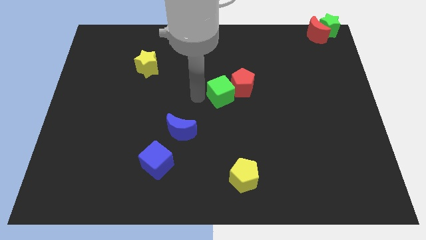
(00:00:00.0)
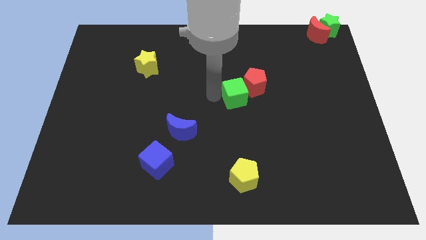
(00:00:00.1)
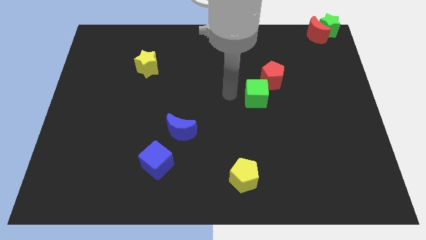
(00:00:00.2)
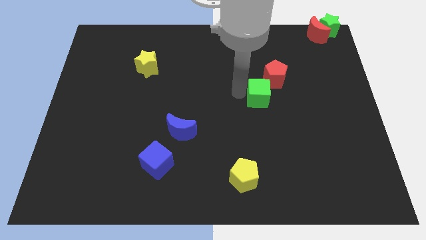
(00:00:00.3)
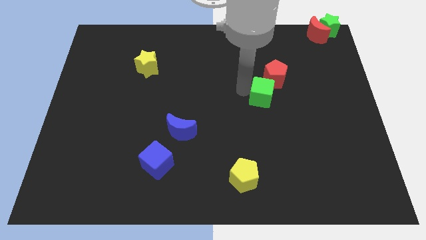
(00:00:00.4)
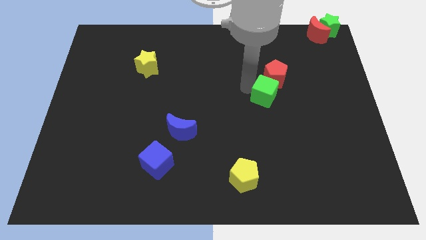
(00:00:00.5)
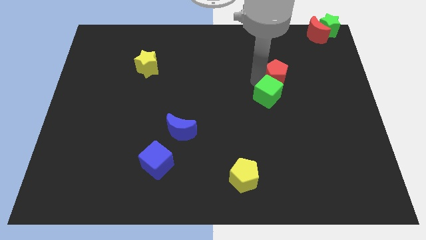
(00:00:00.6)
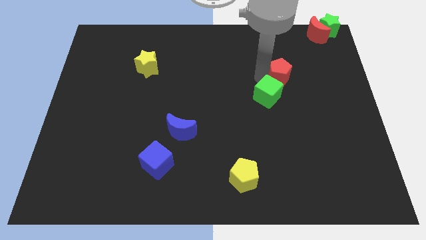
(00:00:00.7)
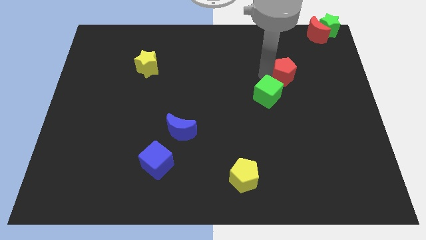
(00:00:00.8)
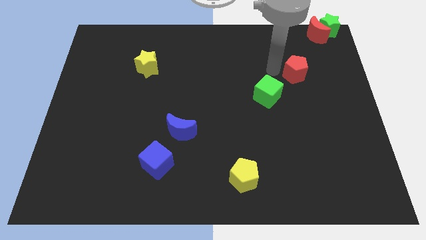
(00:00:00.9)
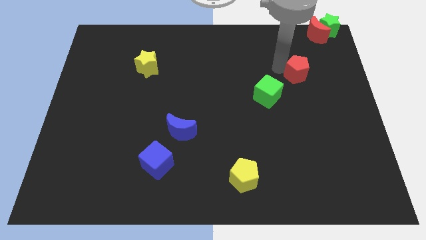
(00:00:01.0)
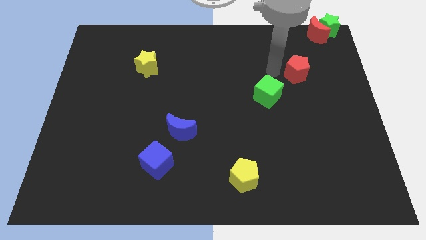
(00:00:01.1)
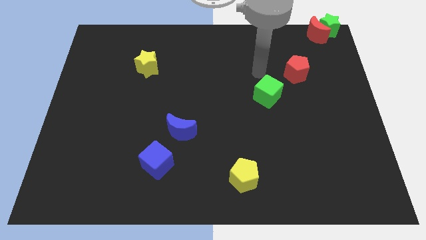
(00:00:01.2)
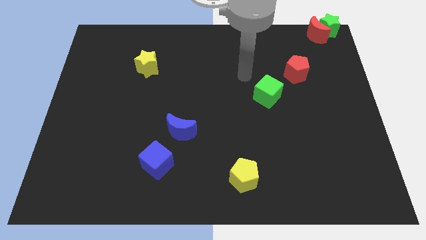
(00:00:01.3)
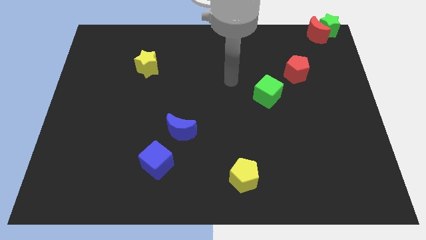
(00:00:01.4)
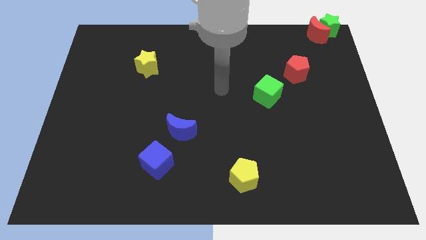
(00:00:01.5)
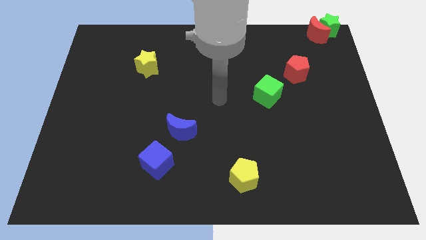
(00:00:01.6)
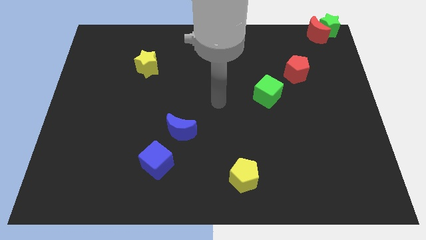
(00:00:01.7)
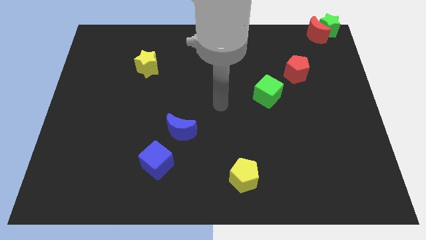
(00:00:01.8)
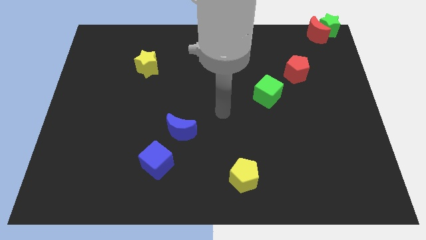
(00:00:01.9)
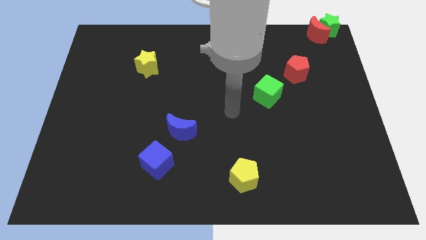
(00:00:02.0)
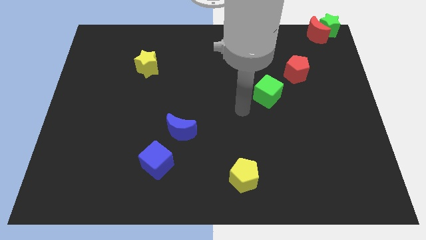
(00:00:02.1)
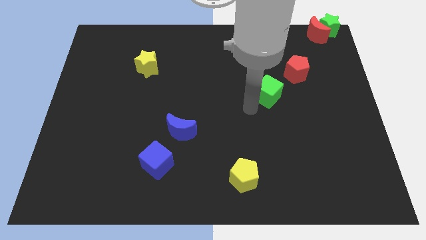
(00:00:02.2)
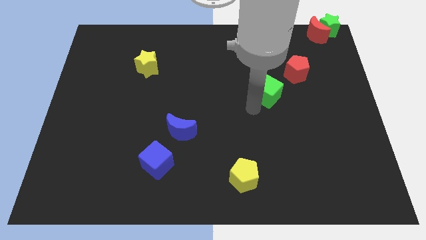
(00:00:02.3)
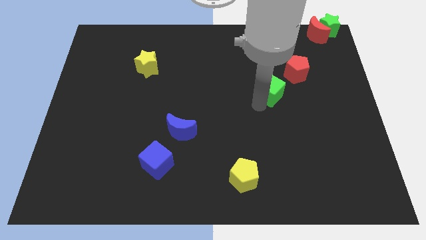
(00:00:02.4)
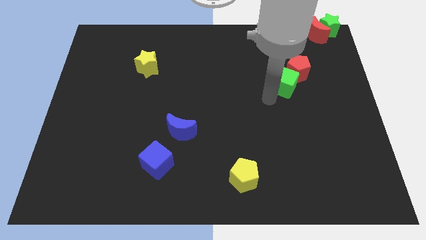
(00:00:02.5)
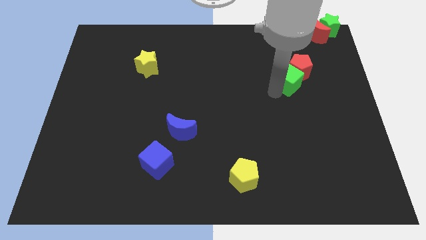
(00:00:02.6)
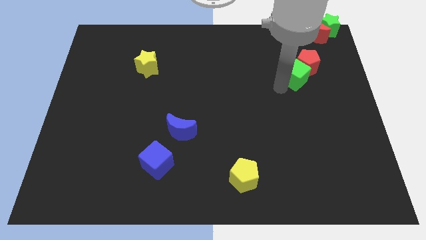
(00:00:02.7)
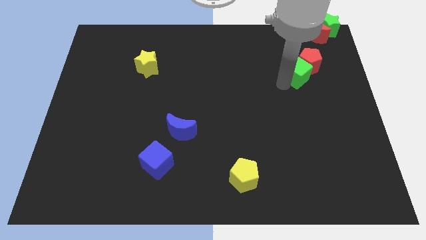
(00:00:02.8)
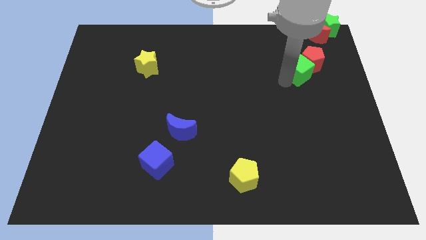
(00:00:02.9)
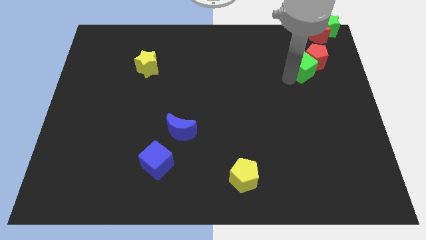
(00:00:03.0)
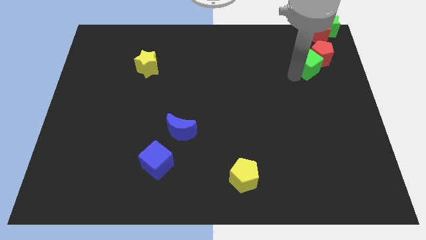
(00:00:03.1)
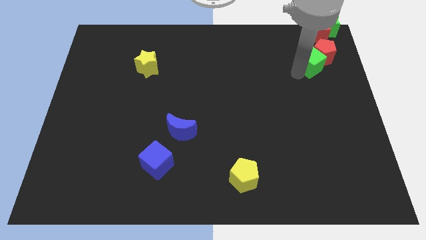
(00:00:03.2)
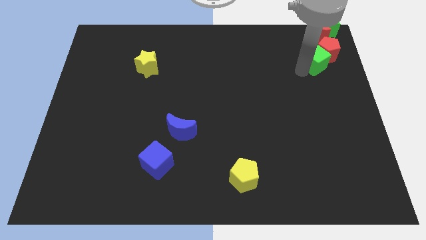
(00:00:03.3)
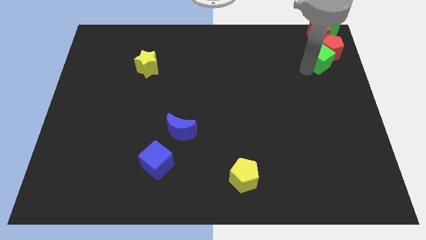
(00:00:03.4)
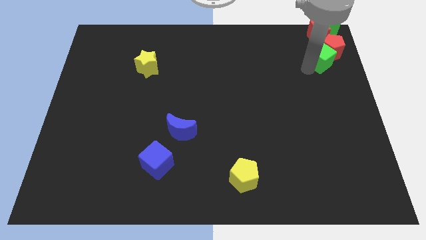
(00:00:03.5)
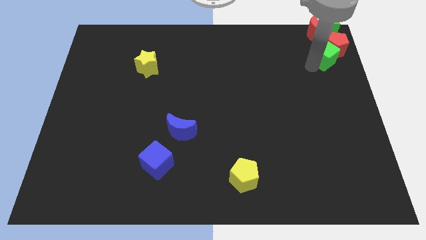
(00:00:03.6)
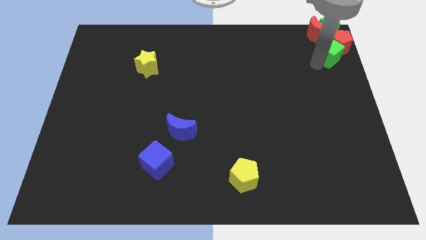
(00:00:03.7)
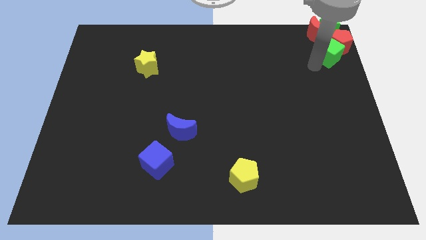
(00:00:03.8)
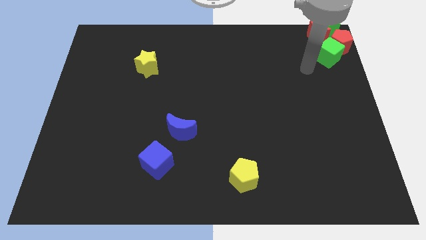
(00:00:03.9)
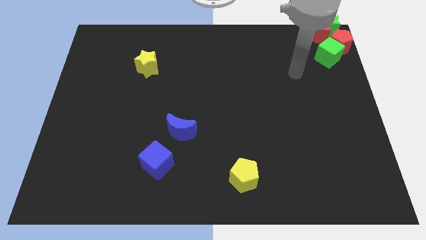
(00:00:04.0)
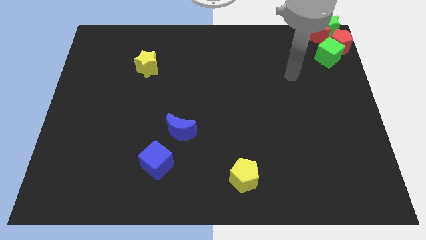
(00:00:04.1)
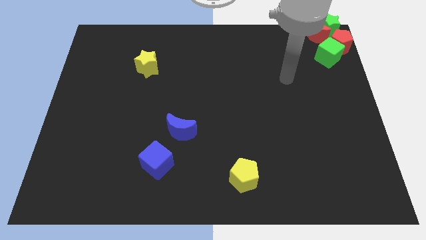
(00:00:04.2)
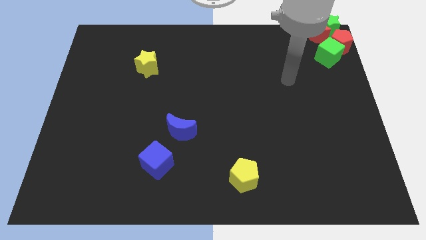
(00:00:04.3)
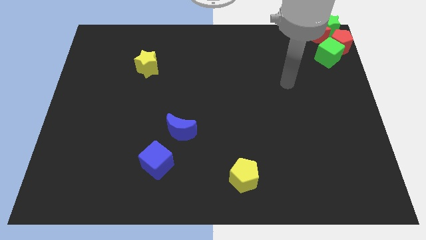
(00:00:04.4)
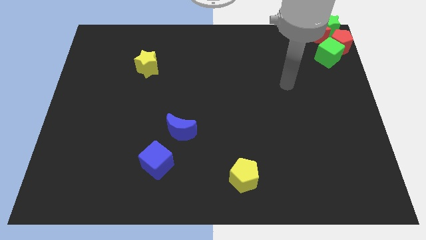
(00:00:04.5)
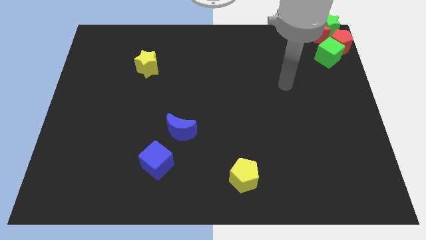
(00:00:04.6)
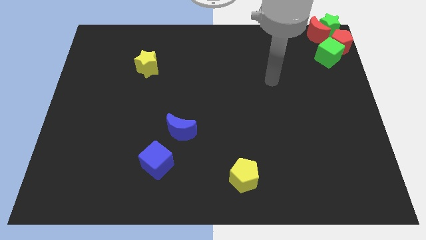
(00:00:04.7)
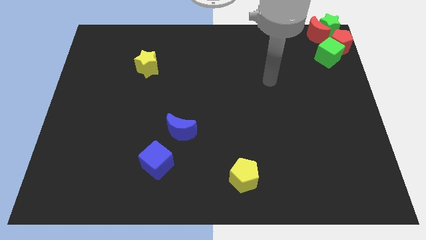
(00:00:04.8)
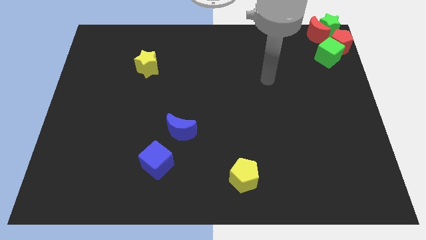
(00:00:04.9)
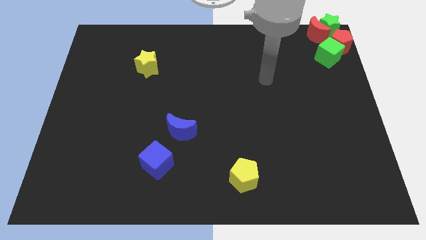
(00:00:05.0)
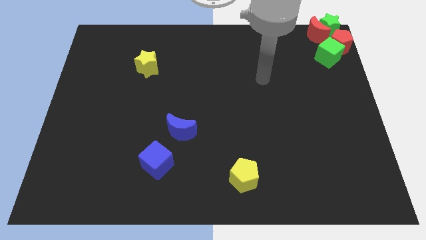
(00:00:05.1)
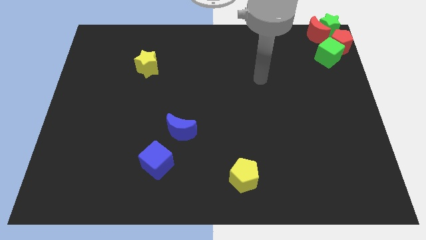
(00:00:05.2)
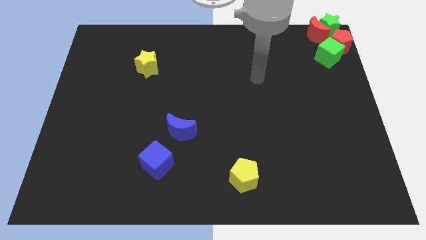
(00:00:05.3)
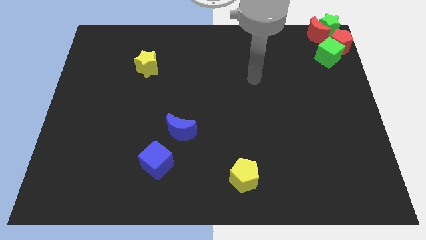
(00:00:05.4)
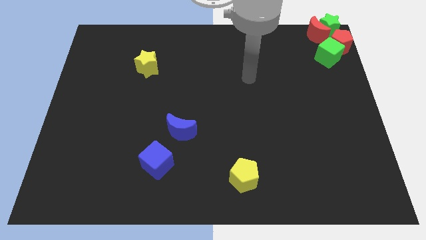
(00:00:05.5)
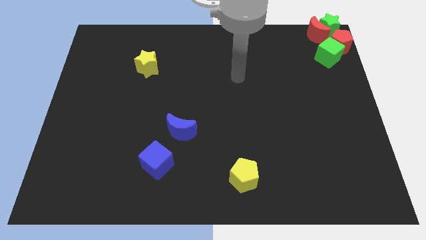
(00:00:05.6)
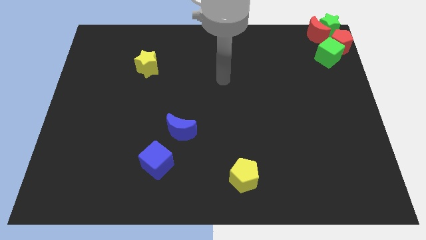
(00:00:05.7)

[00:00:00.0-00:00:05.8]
slide the green cube and red pentagon below the green star and red moon

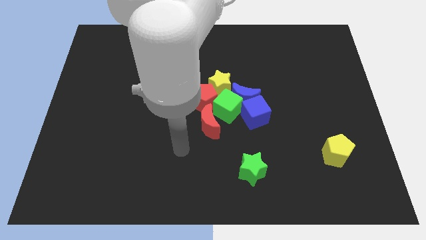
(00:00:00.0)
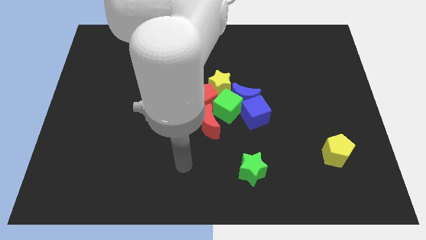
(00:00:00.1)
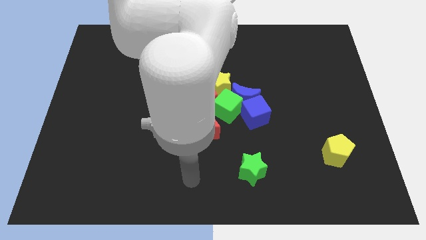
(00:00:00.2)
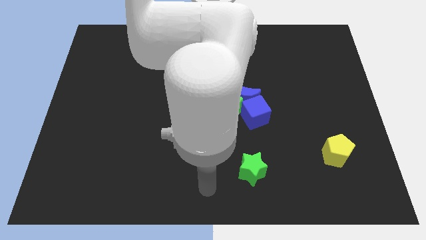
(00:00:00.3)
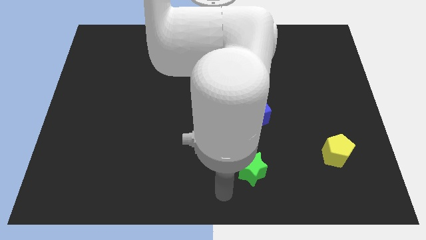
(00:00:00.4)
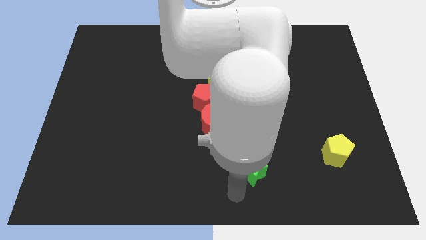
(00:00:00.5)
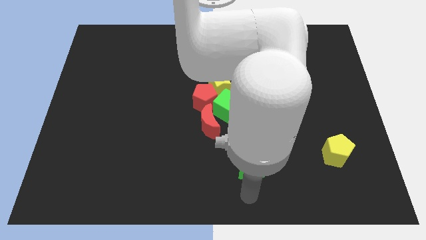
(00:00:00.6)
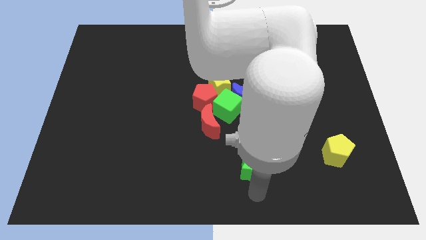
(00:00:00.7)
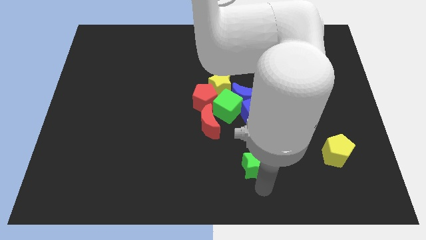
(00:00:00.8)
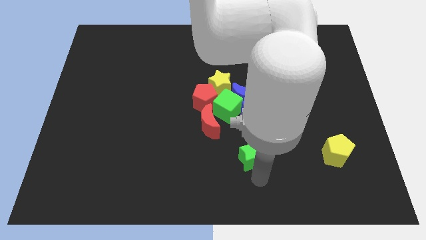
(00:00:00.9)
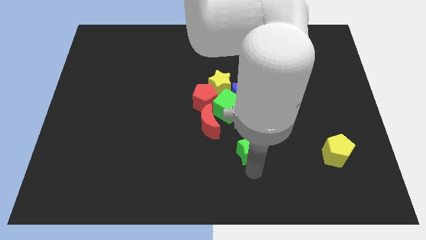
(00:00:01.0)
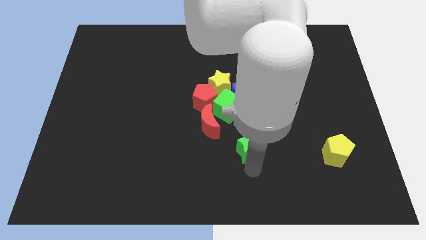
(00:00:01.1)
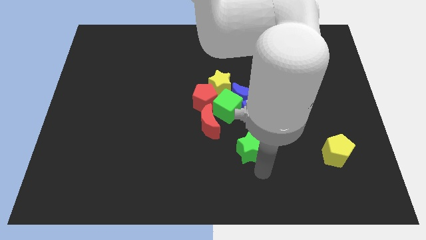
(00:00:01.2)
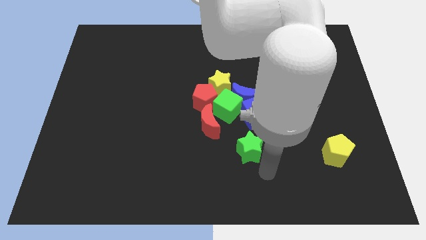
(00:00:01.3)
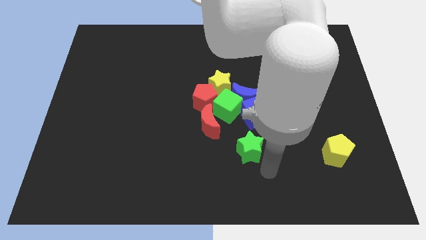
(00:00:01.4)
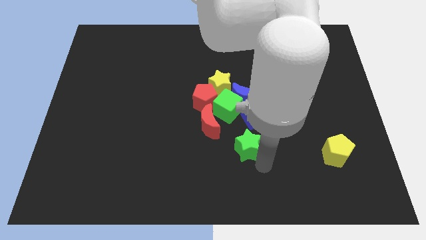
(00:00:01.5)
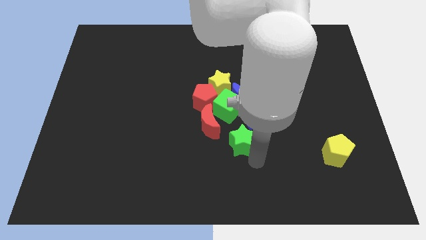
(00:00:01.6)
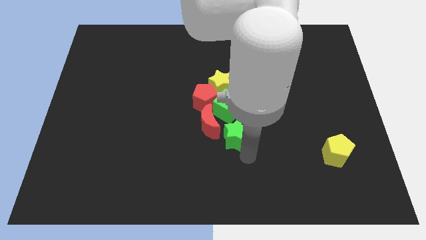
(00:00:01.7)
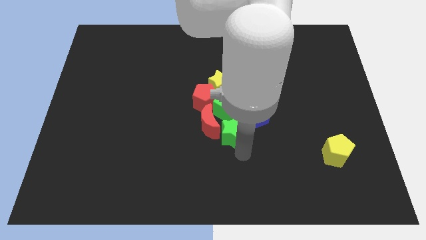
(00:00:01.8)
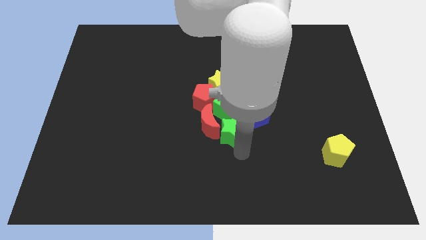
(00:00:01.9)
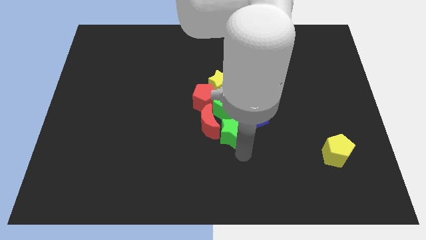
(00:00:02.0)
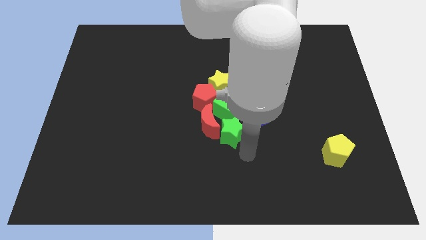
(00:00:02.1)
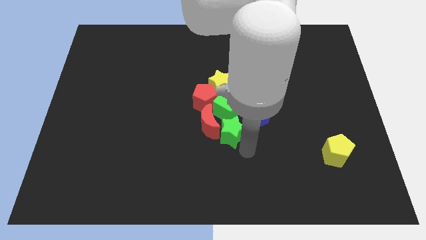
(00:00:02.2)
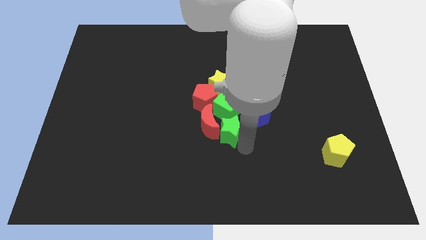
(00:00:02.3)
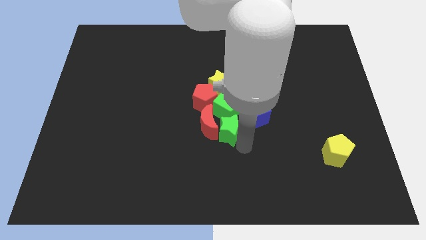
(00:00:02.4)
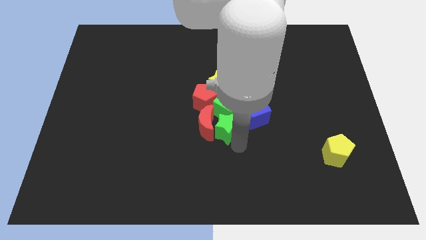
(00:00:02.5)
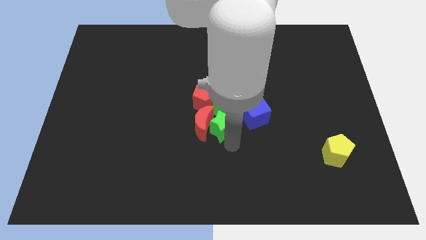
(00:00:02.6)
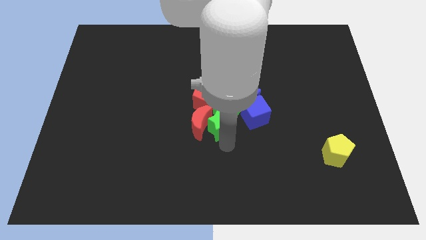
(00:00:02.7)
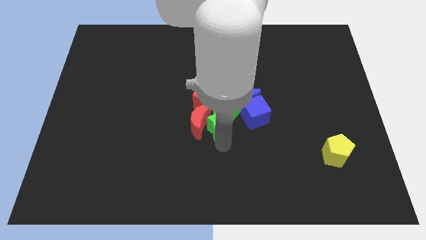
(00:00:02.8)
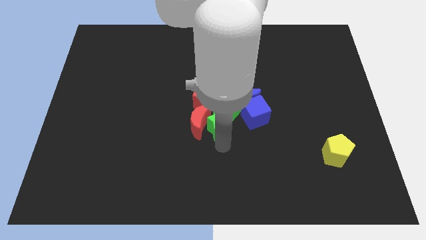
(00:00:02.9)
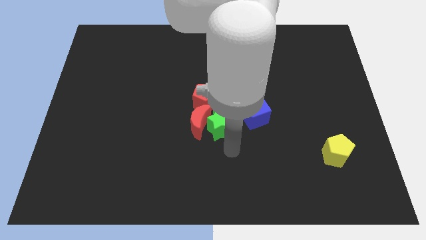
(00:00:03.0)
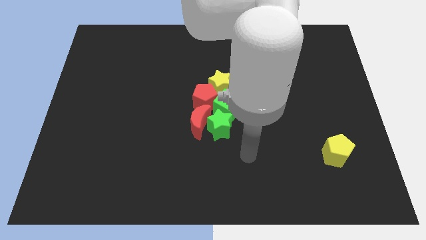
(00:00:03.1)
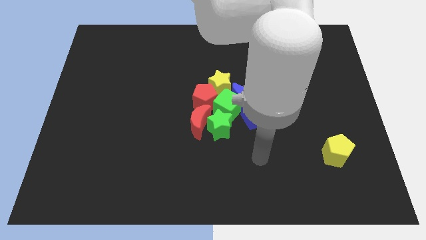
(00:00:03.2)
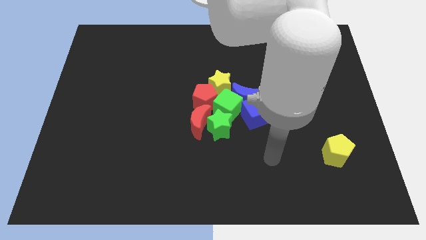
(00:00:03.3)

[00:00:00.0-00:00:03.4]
move the green star to the center of the board
